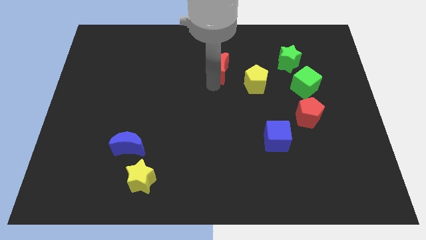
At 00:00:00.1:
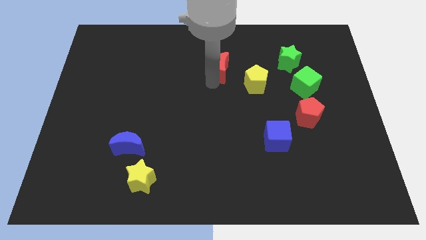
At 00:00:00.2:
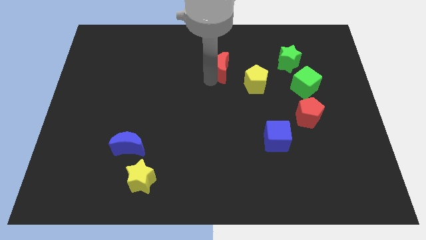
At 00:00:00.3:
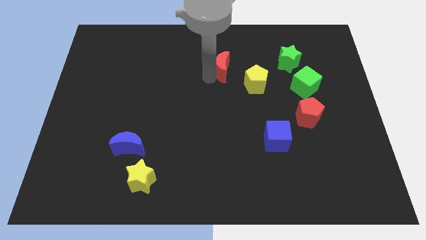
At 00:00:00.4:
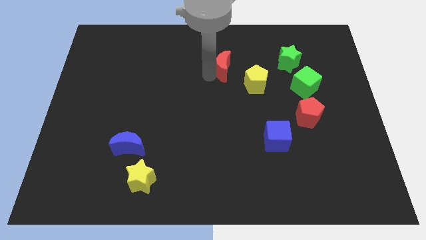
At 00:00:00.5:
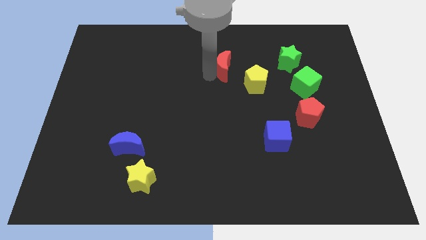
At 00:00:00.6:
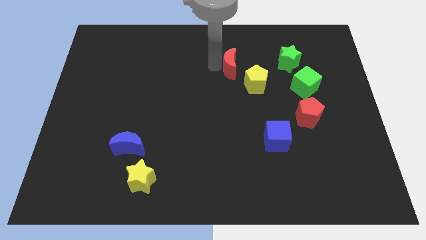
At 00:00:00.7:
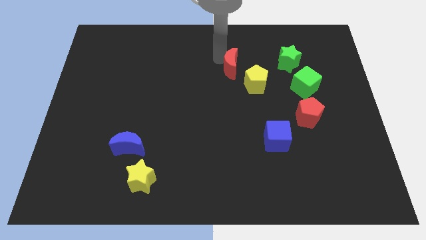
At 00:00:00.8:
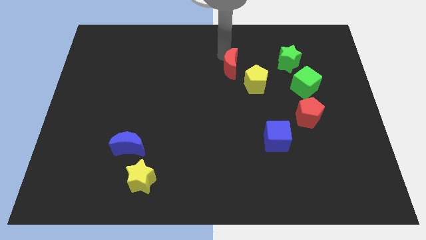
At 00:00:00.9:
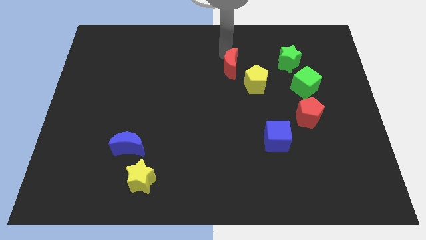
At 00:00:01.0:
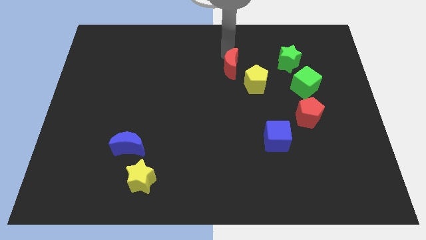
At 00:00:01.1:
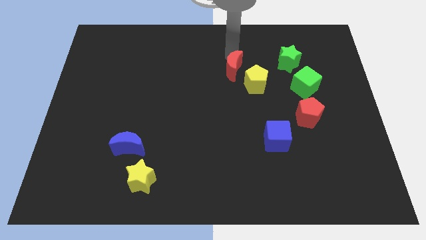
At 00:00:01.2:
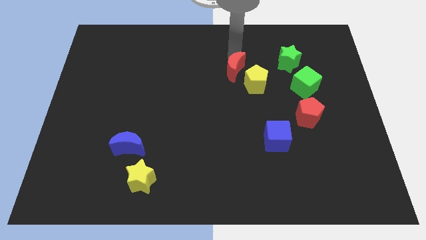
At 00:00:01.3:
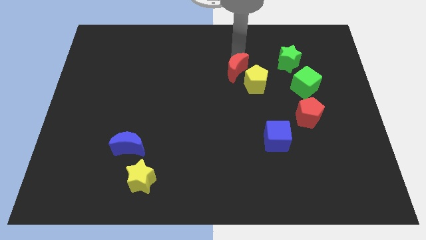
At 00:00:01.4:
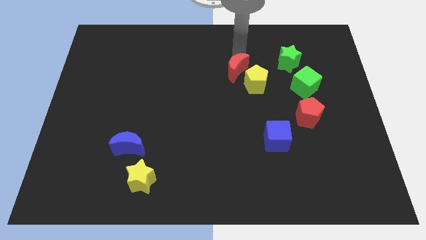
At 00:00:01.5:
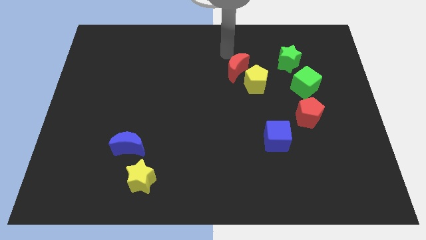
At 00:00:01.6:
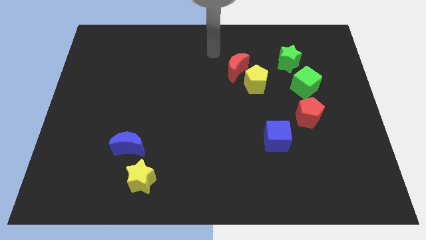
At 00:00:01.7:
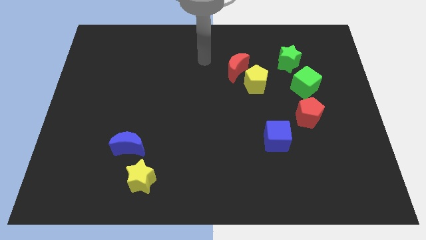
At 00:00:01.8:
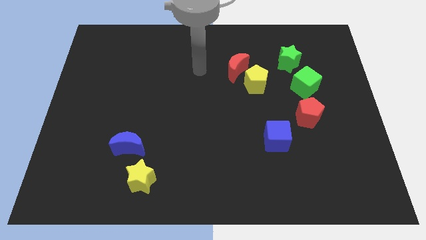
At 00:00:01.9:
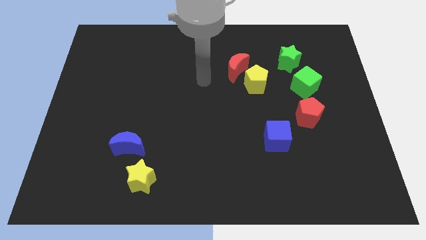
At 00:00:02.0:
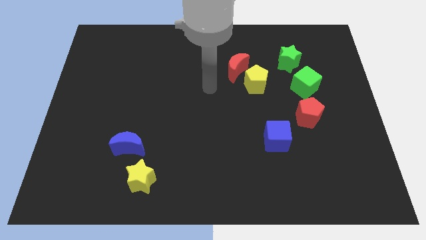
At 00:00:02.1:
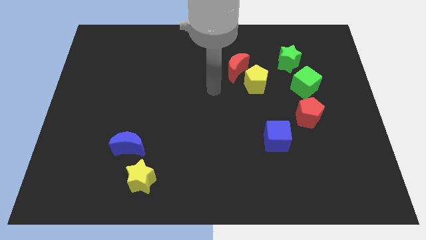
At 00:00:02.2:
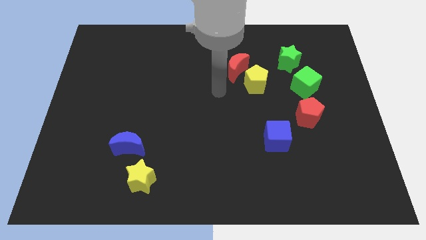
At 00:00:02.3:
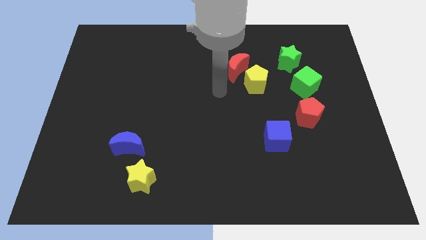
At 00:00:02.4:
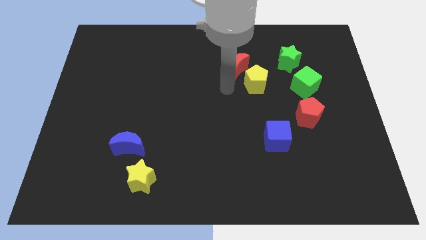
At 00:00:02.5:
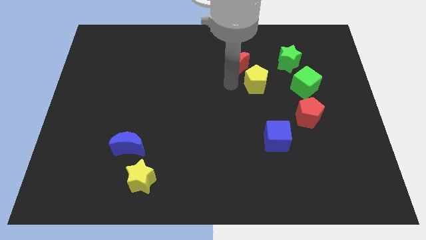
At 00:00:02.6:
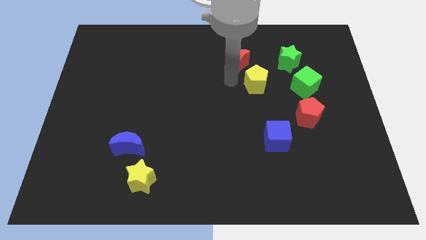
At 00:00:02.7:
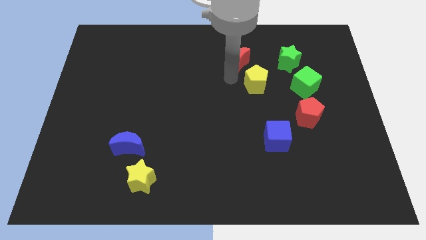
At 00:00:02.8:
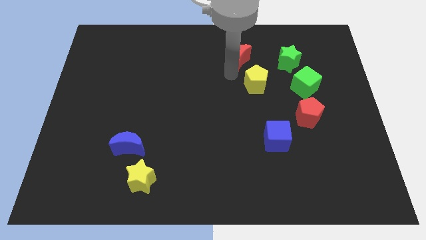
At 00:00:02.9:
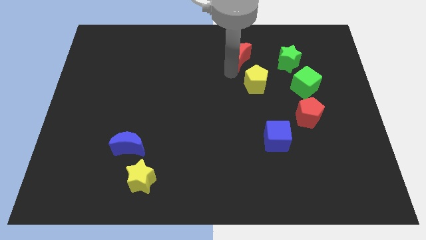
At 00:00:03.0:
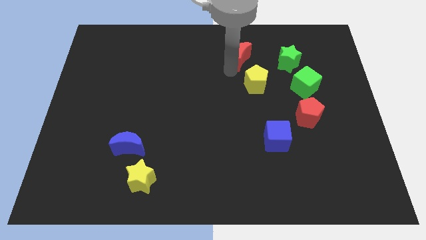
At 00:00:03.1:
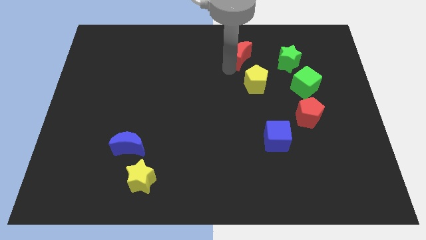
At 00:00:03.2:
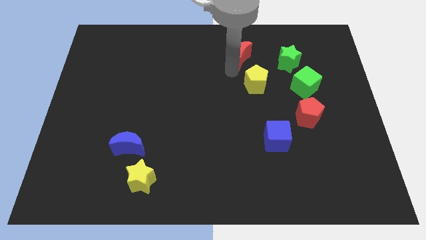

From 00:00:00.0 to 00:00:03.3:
move the red crescent above the yellow pentagon

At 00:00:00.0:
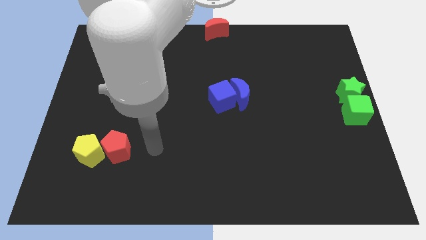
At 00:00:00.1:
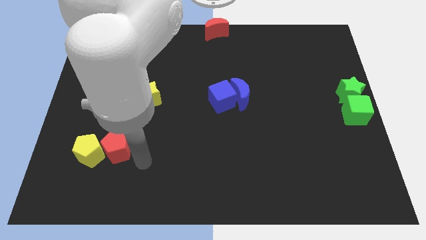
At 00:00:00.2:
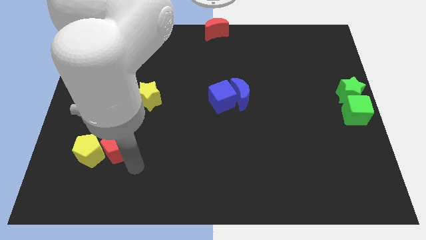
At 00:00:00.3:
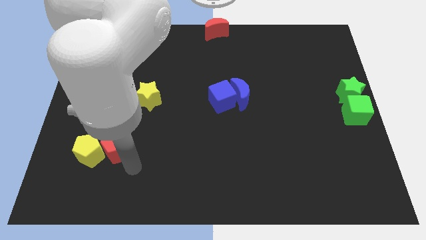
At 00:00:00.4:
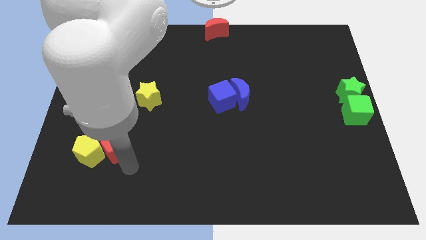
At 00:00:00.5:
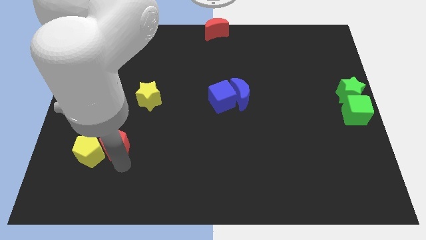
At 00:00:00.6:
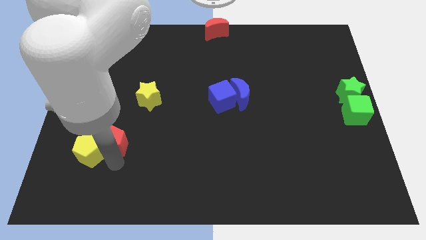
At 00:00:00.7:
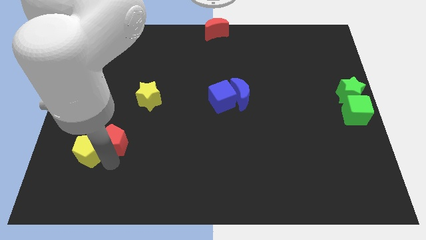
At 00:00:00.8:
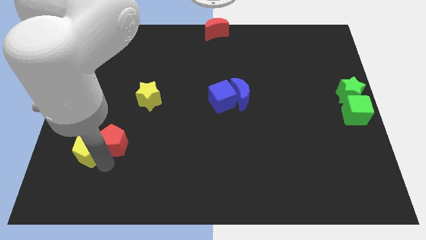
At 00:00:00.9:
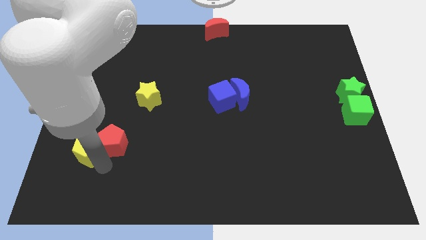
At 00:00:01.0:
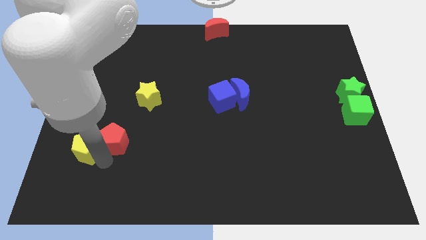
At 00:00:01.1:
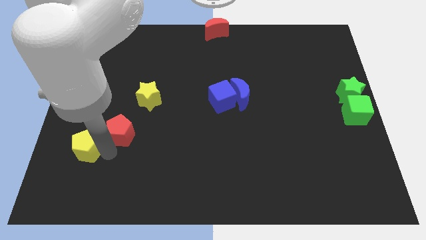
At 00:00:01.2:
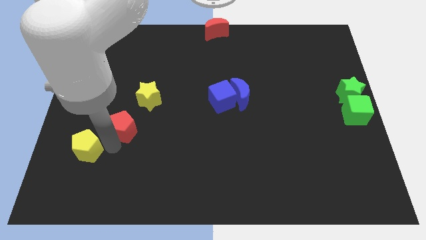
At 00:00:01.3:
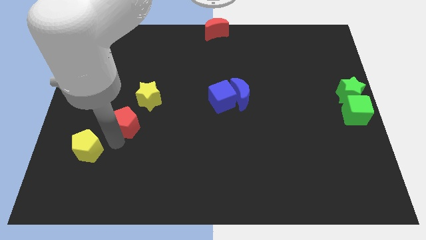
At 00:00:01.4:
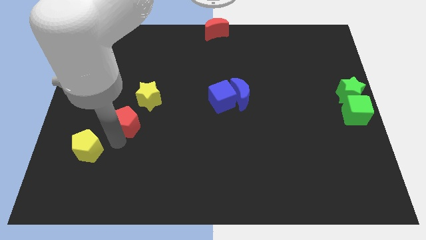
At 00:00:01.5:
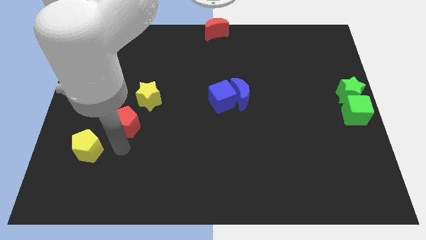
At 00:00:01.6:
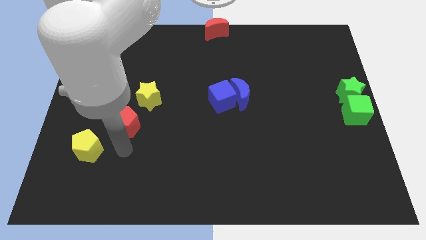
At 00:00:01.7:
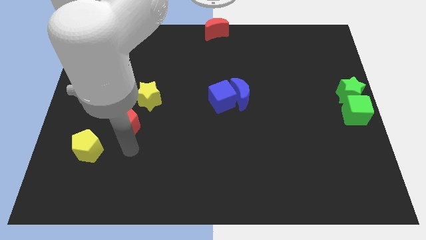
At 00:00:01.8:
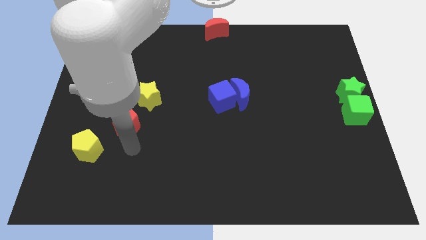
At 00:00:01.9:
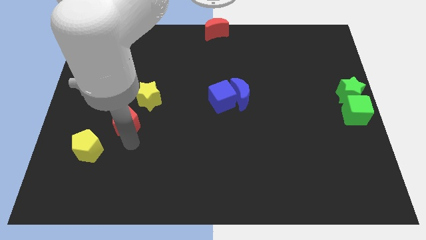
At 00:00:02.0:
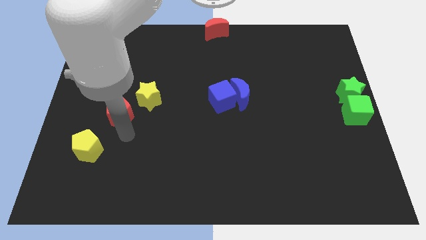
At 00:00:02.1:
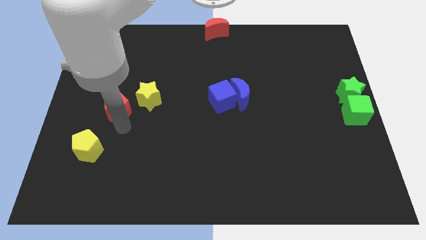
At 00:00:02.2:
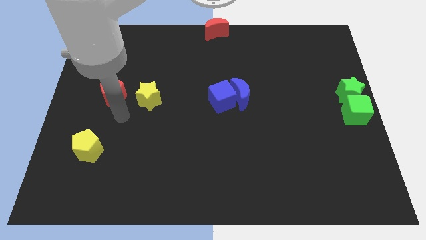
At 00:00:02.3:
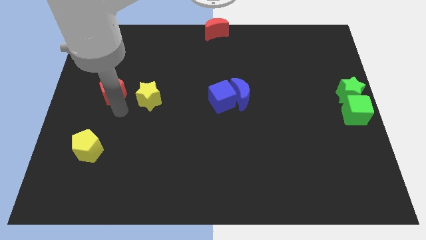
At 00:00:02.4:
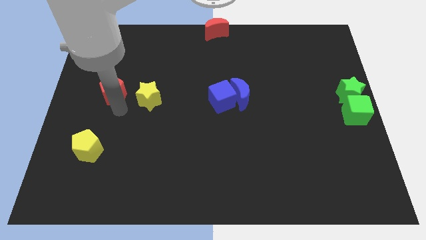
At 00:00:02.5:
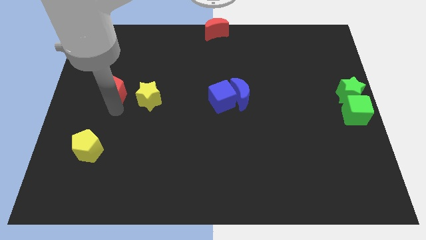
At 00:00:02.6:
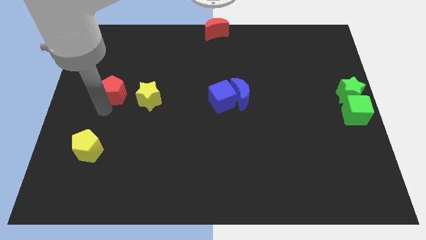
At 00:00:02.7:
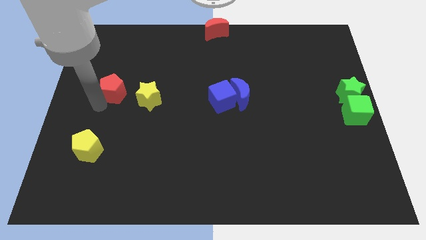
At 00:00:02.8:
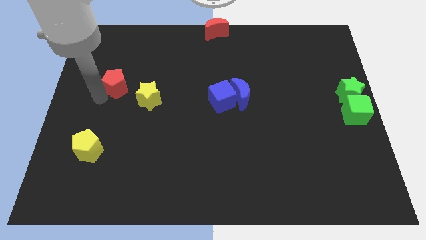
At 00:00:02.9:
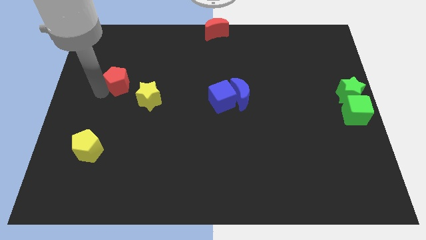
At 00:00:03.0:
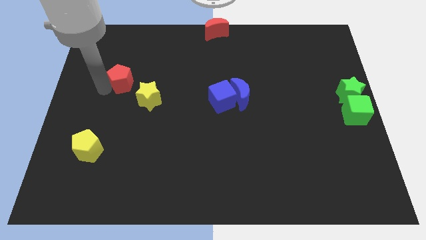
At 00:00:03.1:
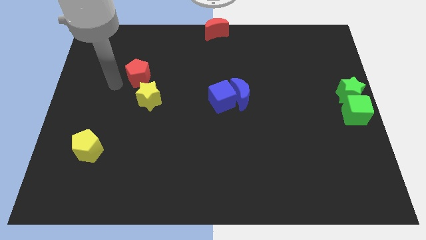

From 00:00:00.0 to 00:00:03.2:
separate the red pentagon and yellow pentagon

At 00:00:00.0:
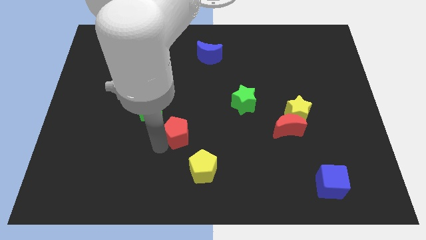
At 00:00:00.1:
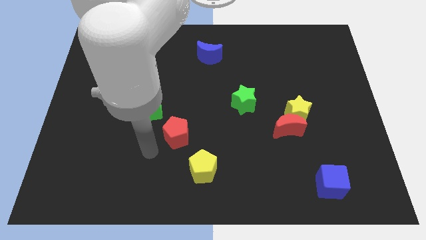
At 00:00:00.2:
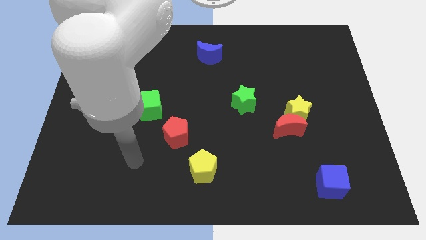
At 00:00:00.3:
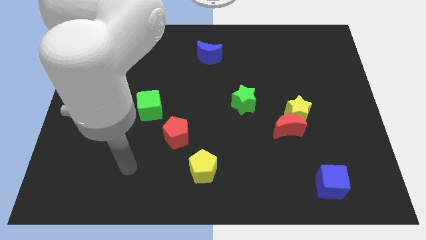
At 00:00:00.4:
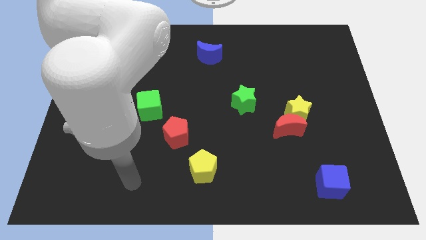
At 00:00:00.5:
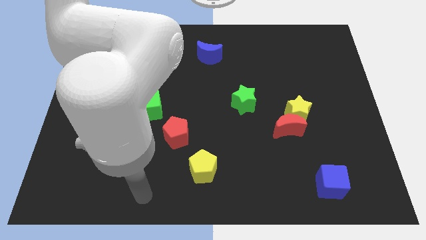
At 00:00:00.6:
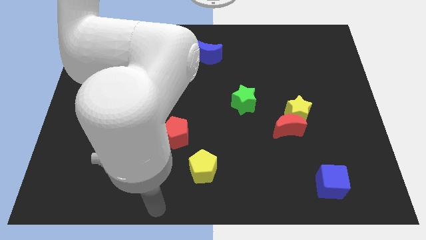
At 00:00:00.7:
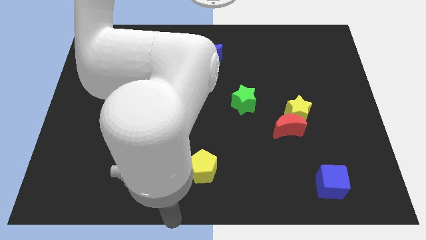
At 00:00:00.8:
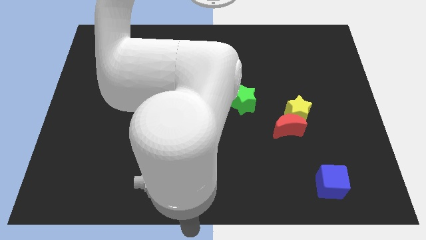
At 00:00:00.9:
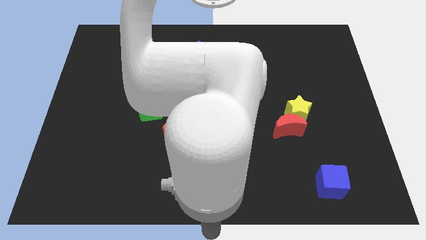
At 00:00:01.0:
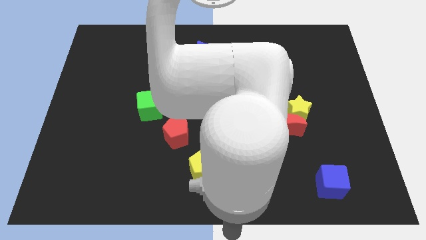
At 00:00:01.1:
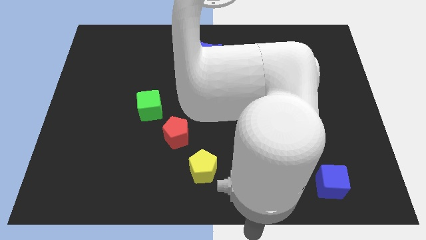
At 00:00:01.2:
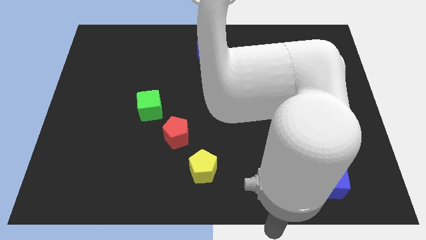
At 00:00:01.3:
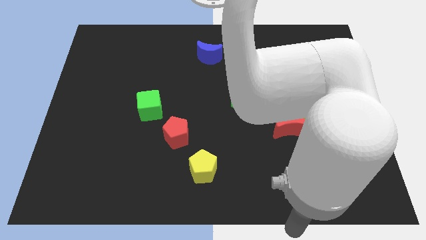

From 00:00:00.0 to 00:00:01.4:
move your arm away from the red pentagon

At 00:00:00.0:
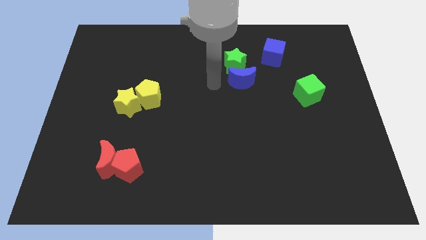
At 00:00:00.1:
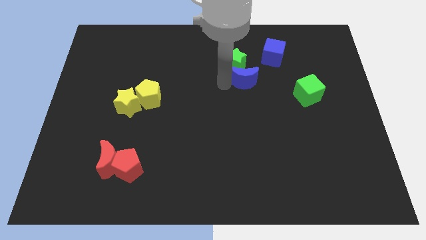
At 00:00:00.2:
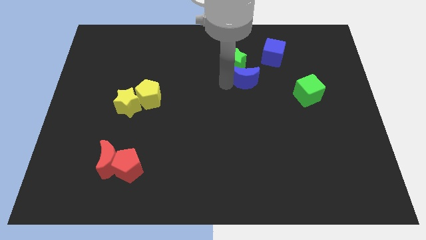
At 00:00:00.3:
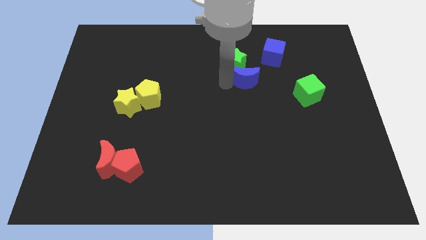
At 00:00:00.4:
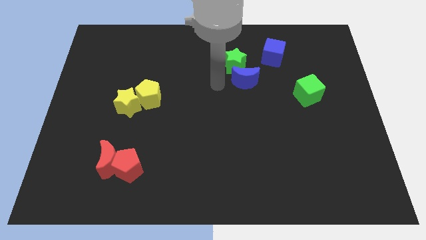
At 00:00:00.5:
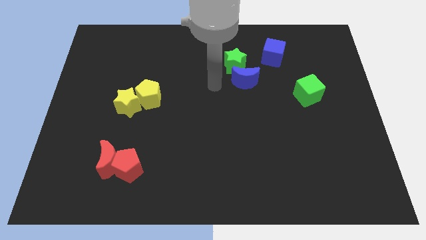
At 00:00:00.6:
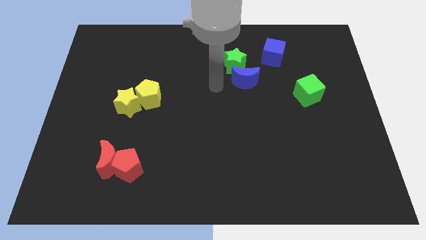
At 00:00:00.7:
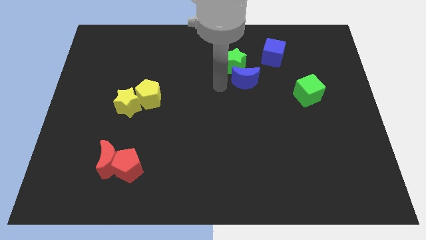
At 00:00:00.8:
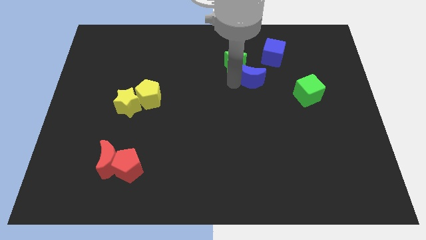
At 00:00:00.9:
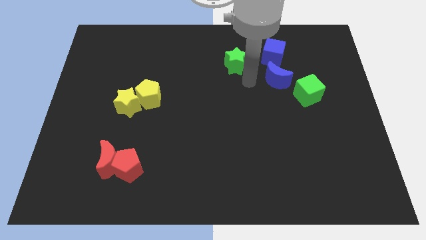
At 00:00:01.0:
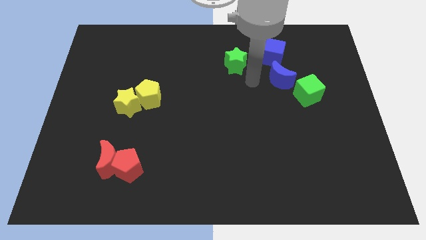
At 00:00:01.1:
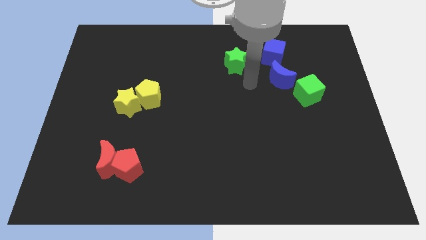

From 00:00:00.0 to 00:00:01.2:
move the blue crescent to the top left of the green cube
